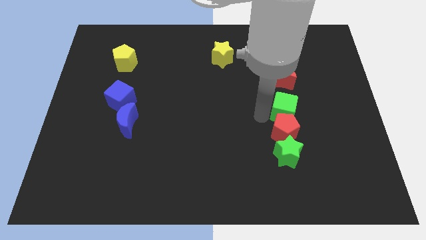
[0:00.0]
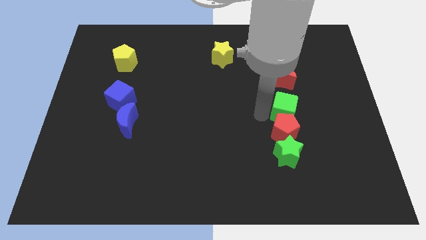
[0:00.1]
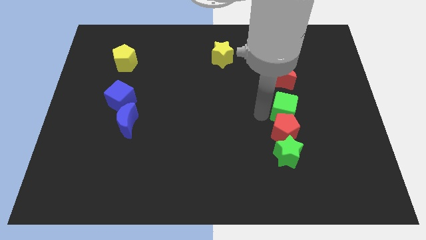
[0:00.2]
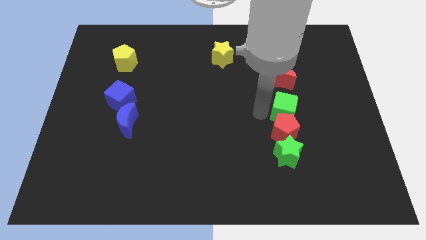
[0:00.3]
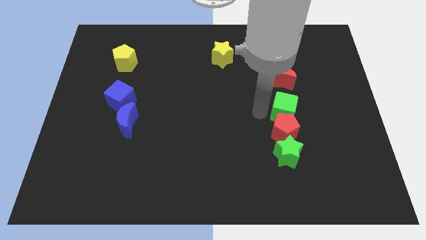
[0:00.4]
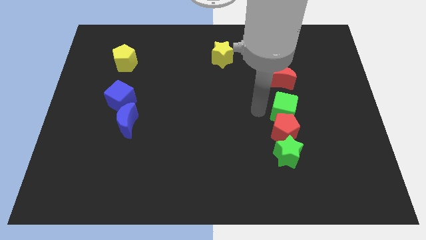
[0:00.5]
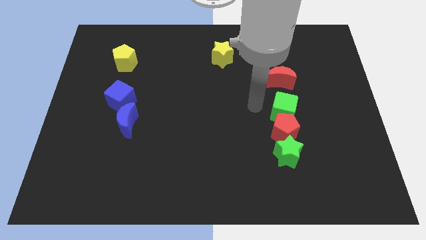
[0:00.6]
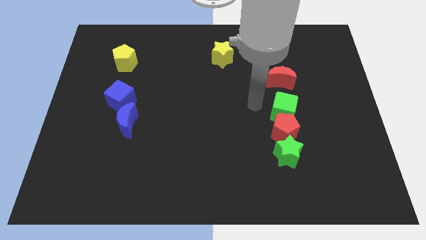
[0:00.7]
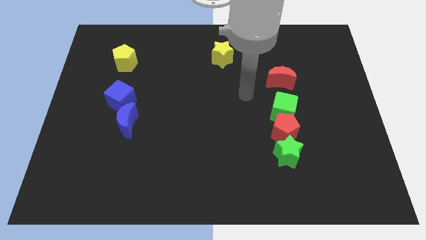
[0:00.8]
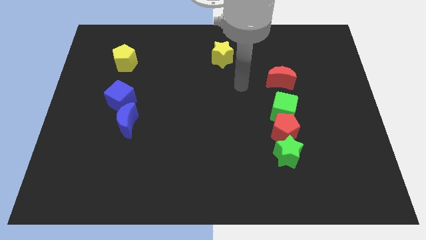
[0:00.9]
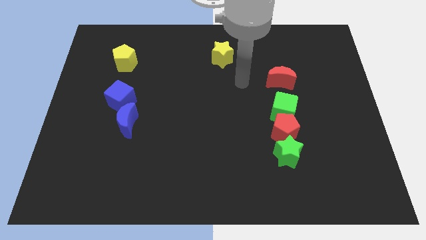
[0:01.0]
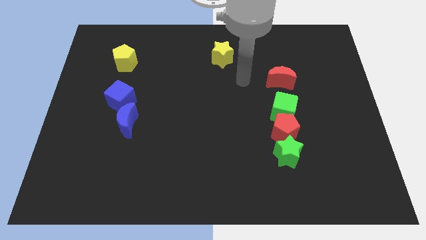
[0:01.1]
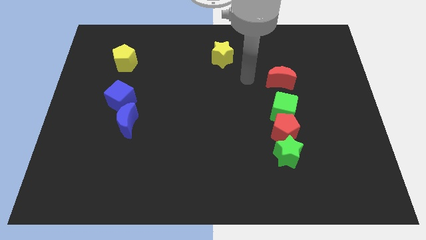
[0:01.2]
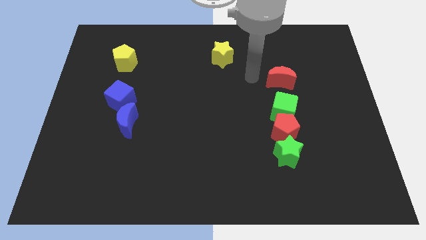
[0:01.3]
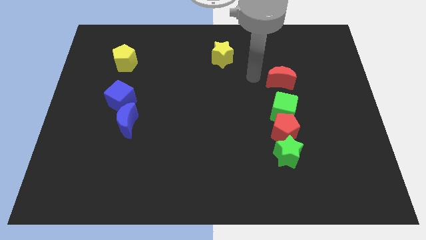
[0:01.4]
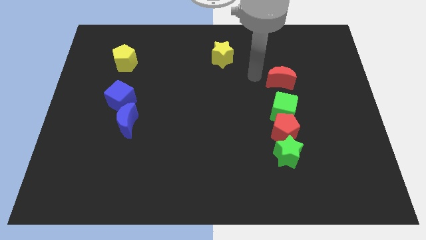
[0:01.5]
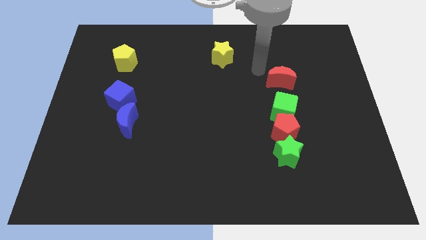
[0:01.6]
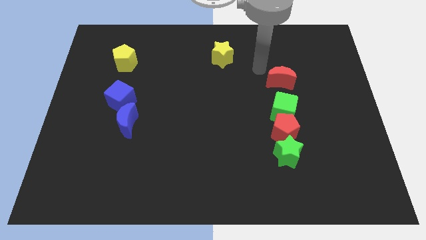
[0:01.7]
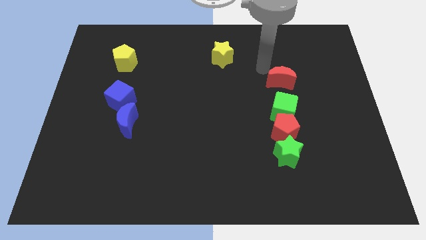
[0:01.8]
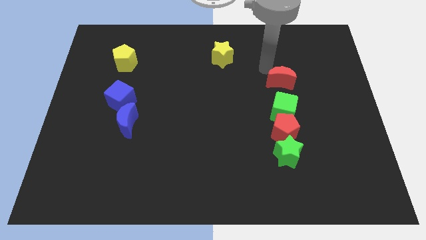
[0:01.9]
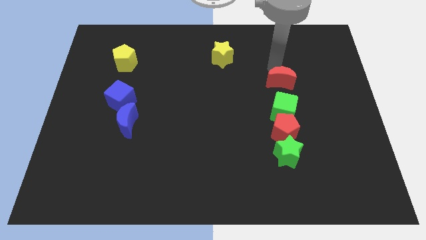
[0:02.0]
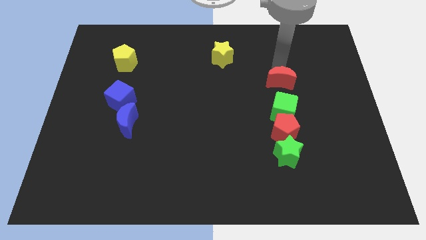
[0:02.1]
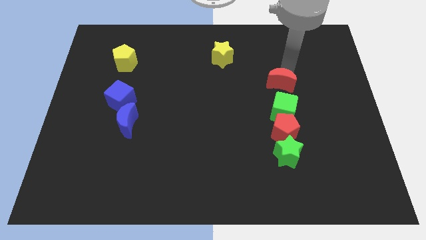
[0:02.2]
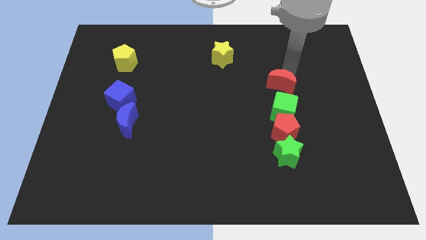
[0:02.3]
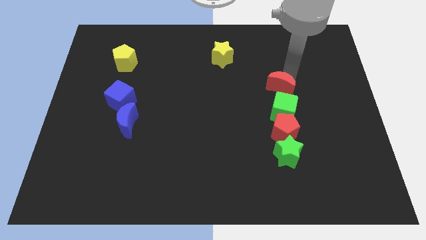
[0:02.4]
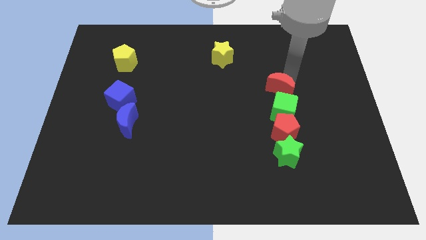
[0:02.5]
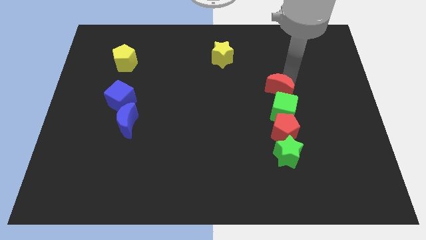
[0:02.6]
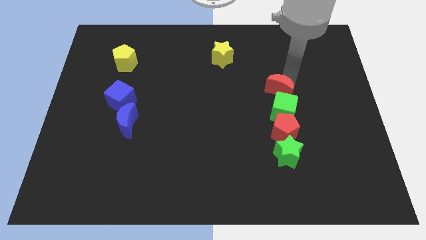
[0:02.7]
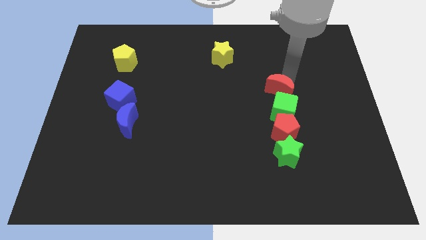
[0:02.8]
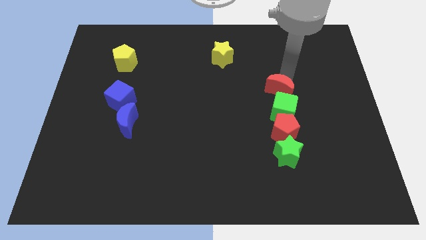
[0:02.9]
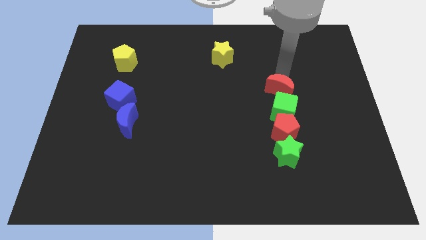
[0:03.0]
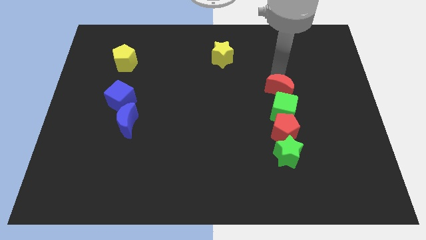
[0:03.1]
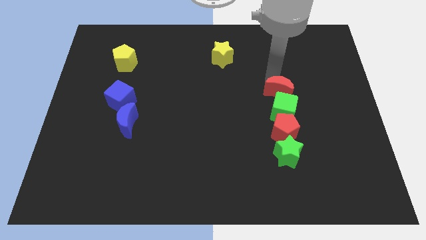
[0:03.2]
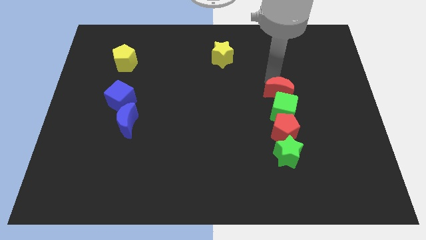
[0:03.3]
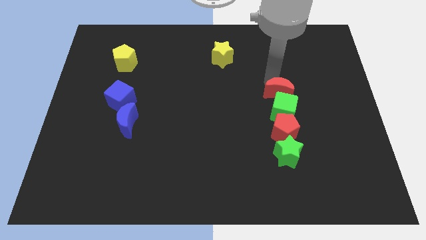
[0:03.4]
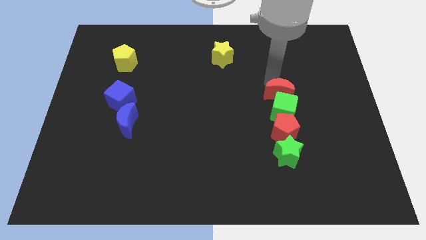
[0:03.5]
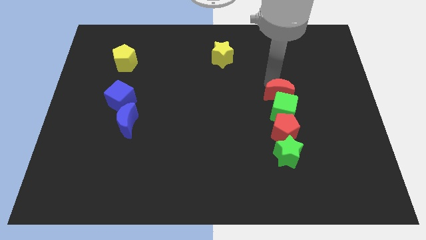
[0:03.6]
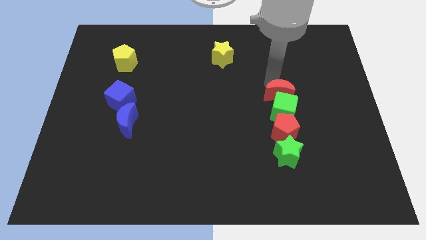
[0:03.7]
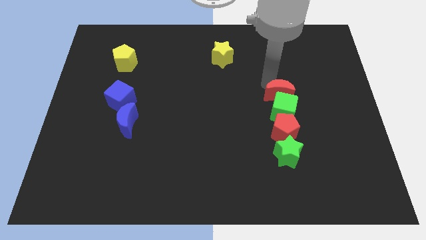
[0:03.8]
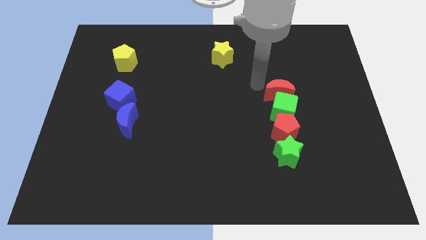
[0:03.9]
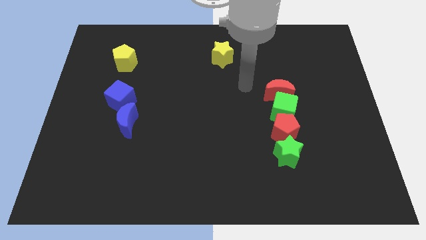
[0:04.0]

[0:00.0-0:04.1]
push the red moon into the green cube

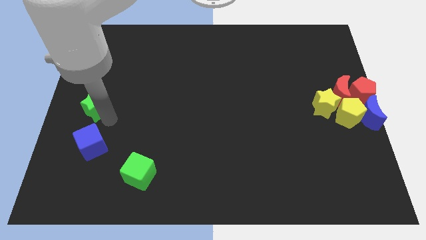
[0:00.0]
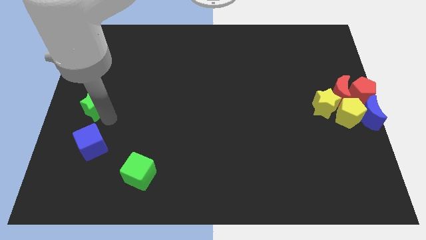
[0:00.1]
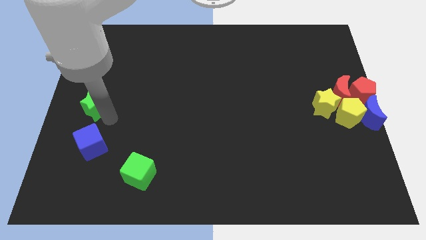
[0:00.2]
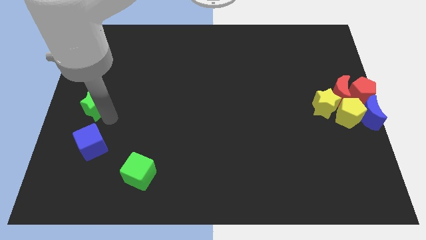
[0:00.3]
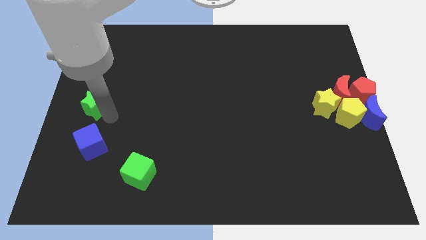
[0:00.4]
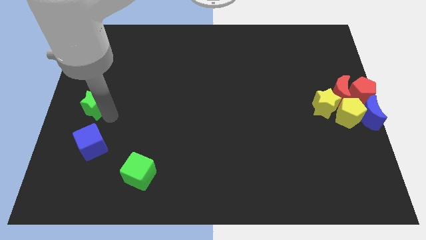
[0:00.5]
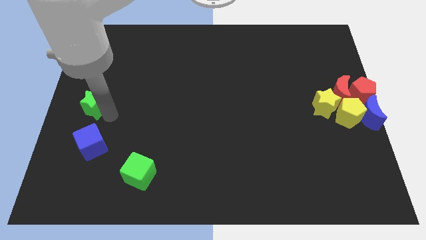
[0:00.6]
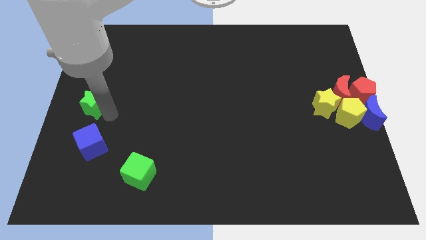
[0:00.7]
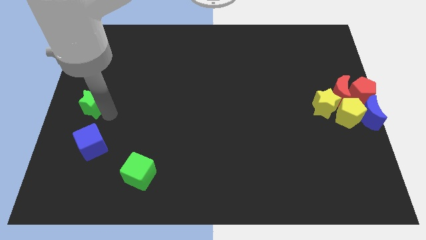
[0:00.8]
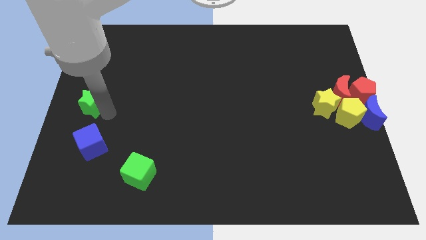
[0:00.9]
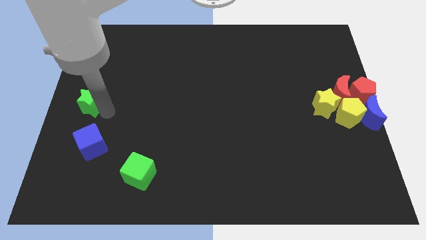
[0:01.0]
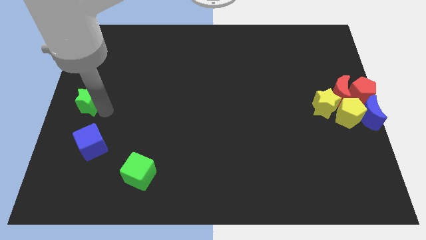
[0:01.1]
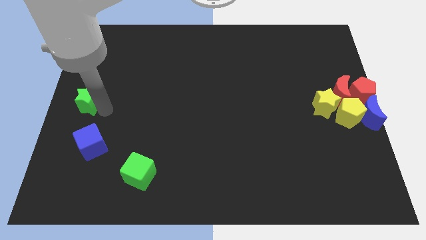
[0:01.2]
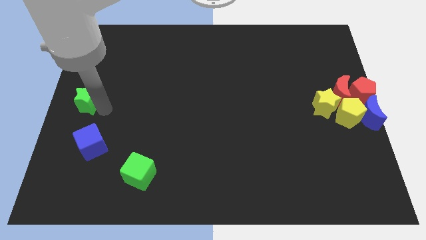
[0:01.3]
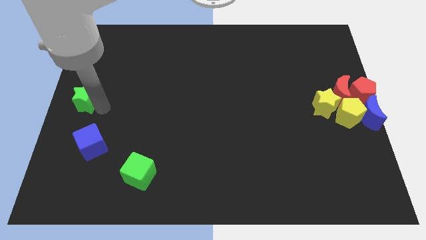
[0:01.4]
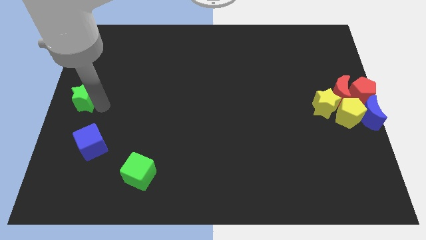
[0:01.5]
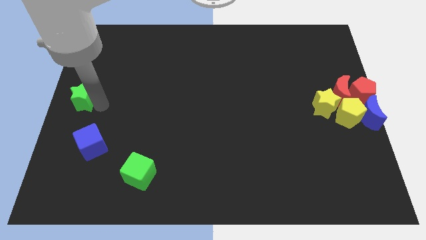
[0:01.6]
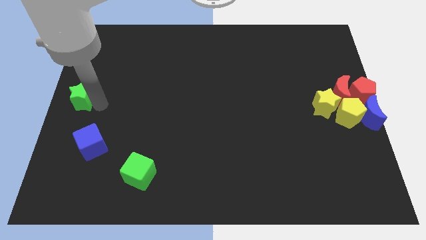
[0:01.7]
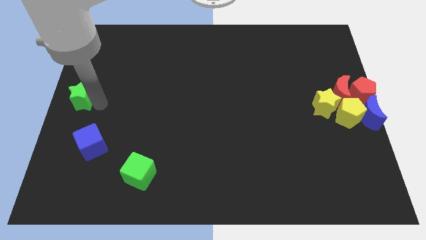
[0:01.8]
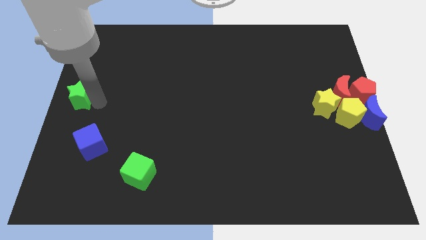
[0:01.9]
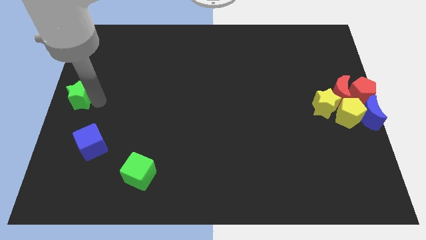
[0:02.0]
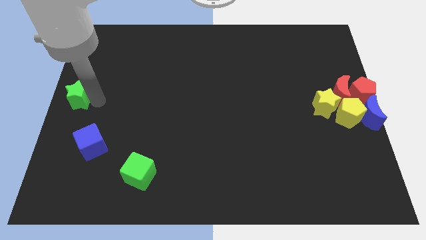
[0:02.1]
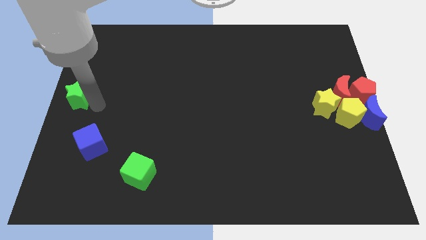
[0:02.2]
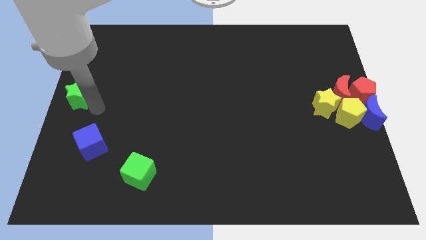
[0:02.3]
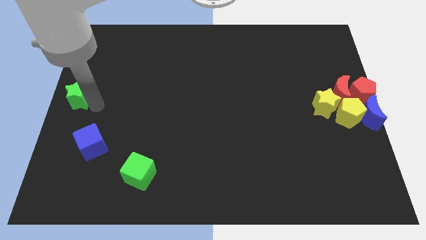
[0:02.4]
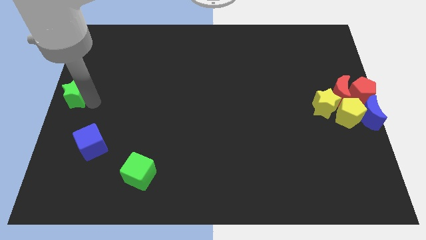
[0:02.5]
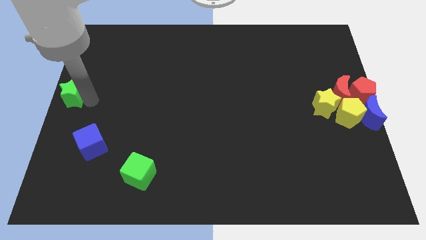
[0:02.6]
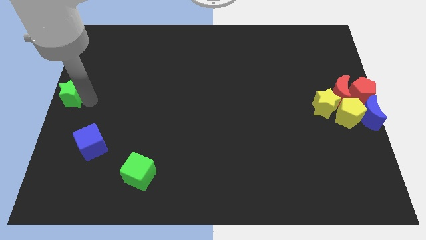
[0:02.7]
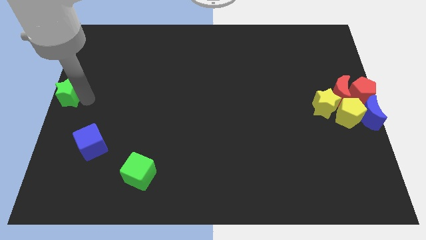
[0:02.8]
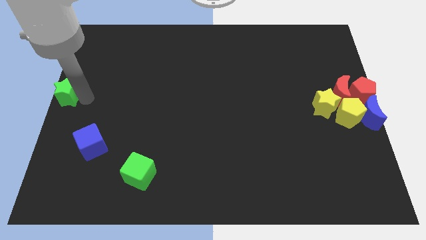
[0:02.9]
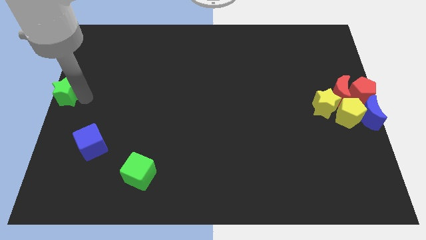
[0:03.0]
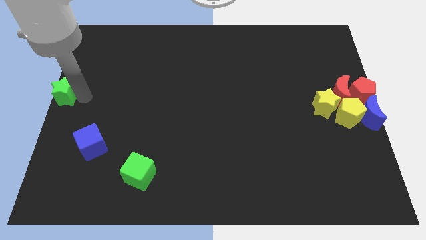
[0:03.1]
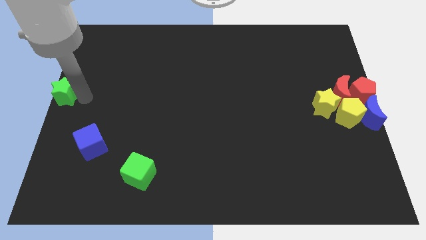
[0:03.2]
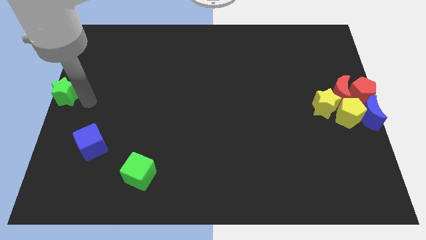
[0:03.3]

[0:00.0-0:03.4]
place the green star at the center left of the board

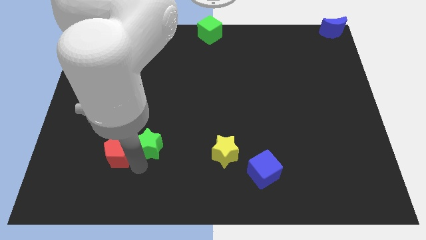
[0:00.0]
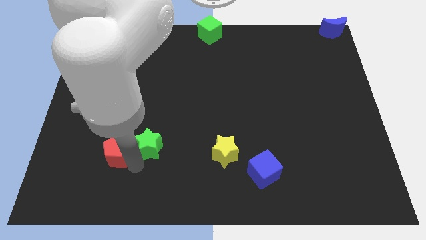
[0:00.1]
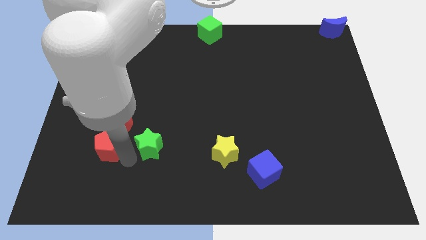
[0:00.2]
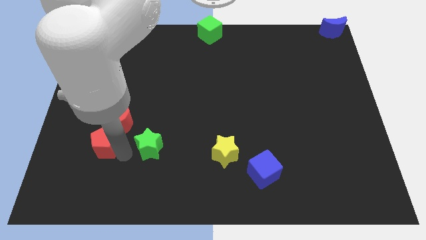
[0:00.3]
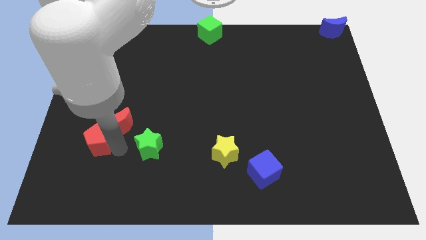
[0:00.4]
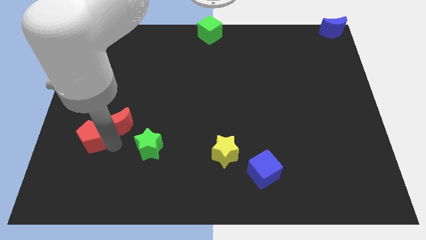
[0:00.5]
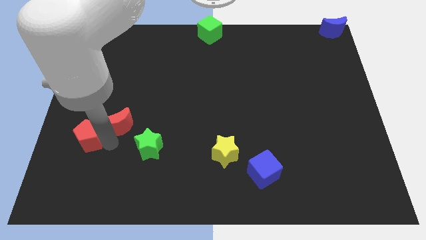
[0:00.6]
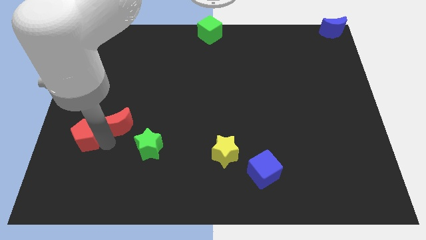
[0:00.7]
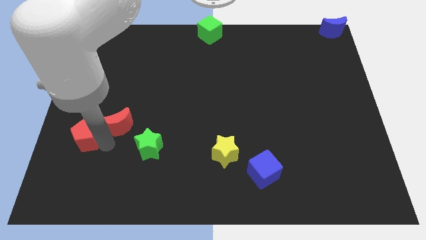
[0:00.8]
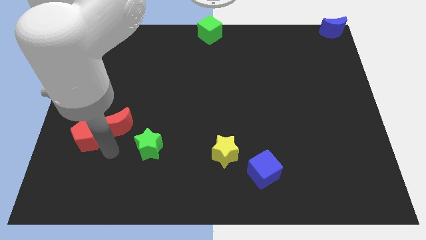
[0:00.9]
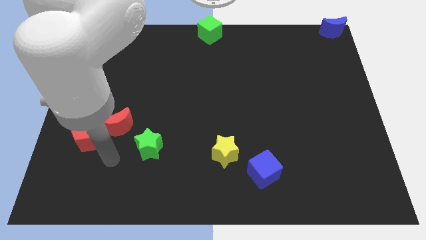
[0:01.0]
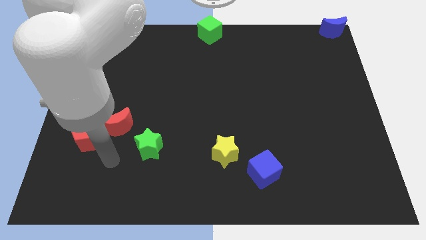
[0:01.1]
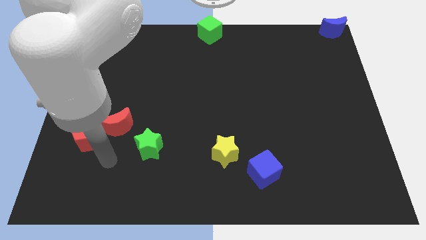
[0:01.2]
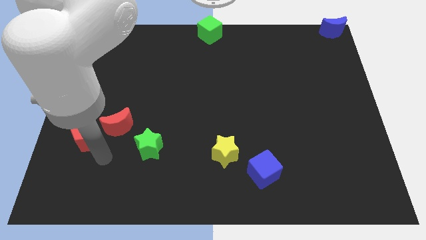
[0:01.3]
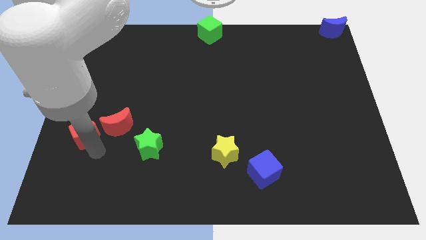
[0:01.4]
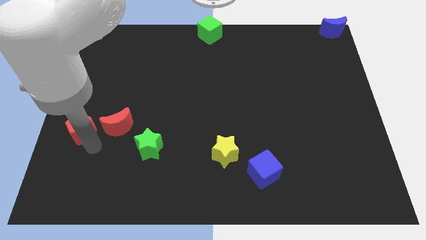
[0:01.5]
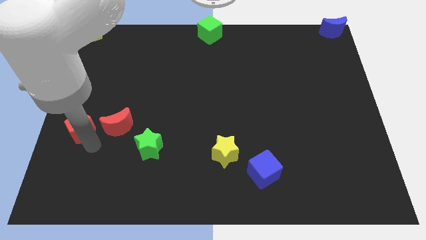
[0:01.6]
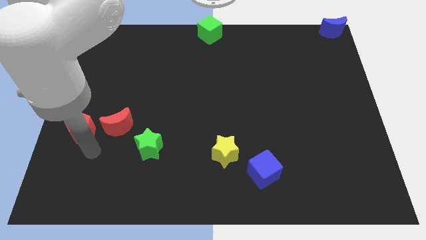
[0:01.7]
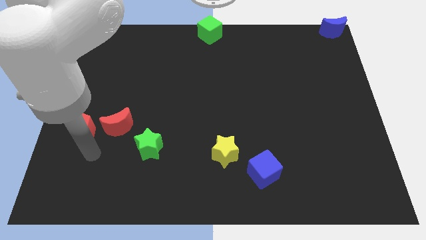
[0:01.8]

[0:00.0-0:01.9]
move the red pentagon to the left side of red moon
